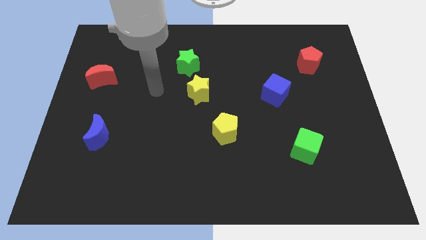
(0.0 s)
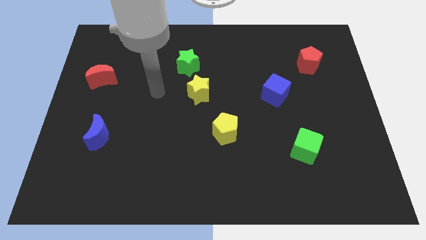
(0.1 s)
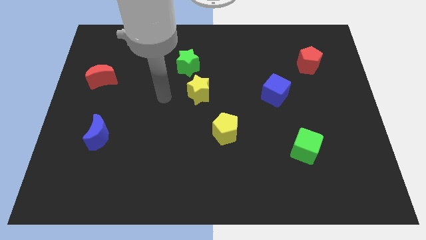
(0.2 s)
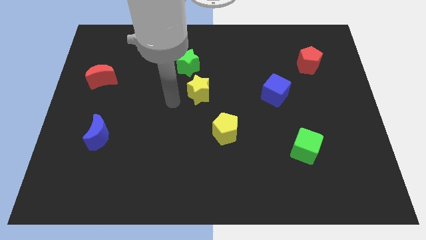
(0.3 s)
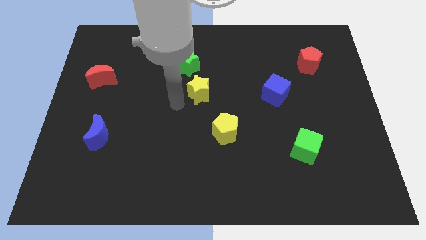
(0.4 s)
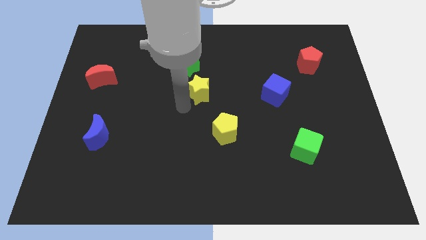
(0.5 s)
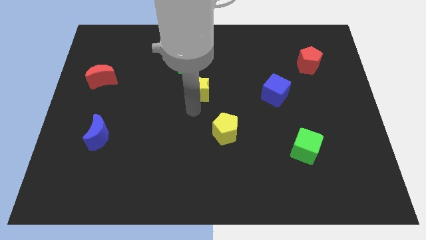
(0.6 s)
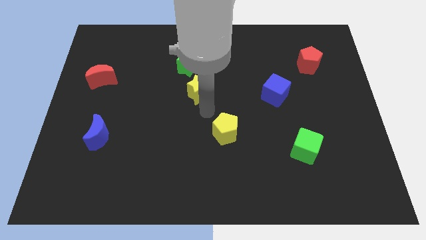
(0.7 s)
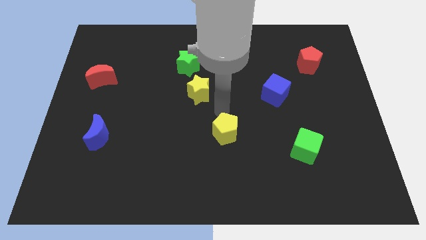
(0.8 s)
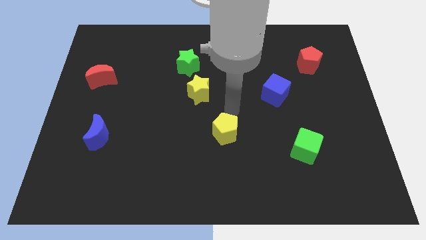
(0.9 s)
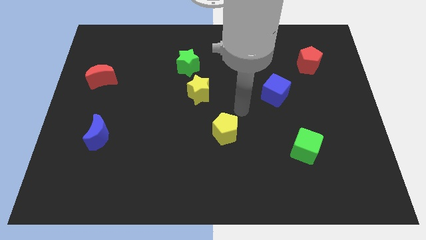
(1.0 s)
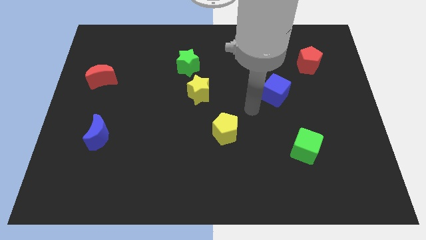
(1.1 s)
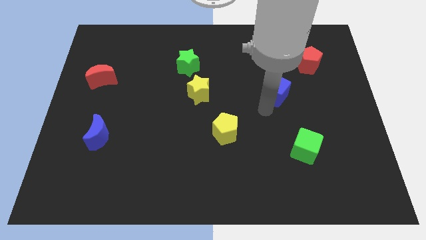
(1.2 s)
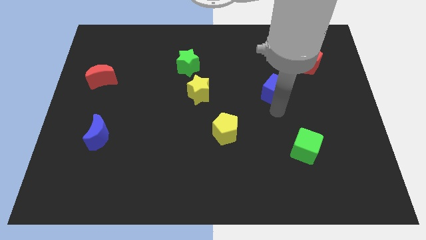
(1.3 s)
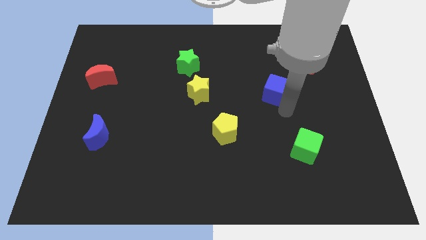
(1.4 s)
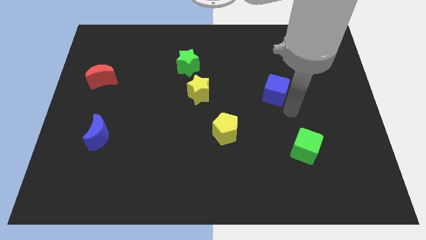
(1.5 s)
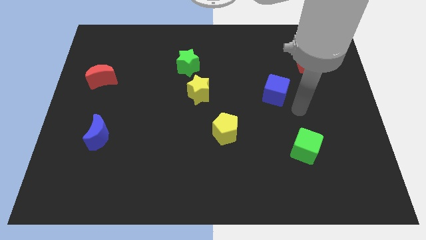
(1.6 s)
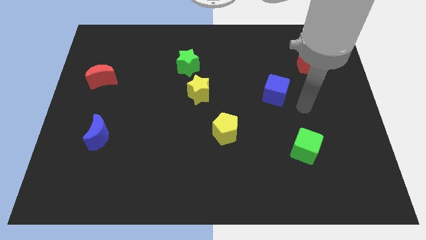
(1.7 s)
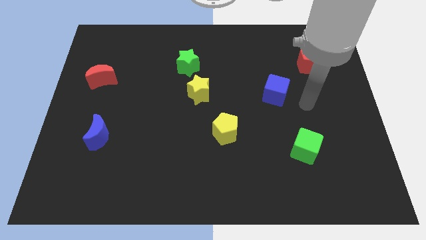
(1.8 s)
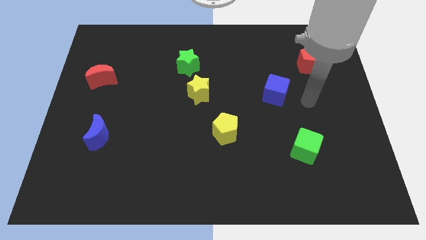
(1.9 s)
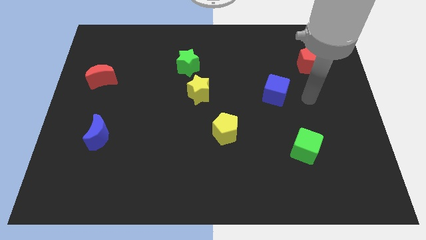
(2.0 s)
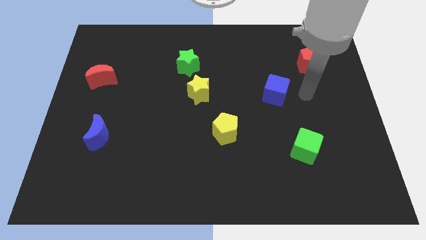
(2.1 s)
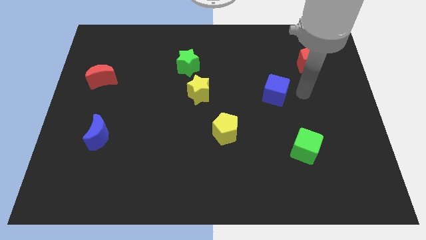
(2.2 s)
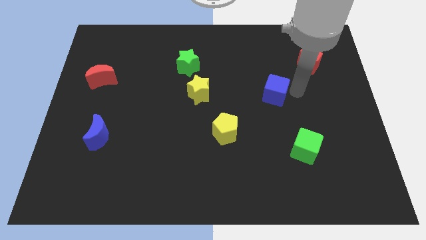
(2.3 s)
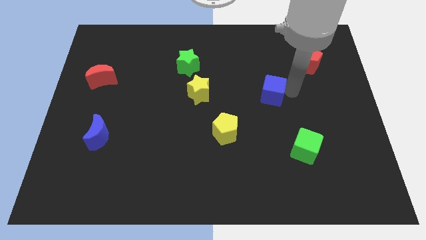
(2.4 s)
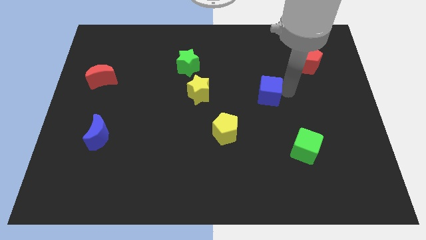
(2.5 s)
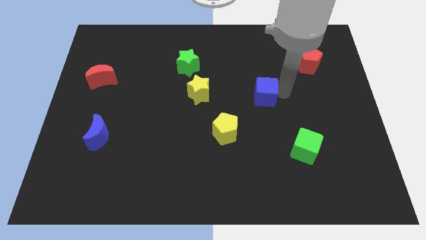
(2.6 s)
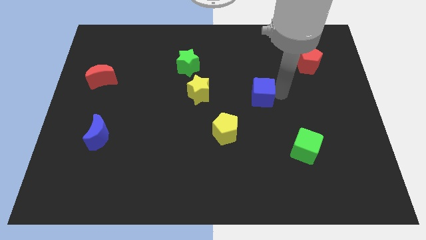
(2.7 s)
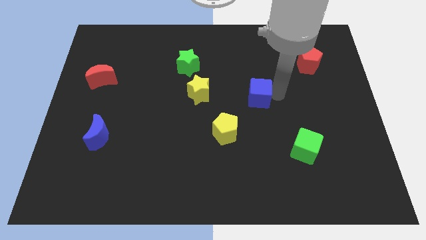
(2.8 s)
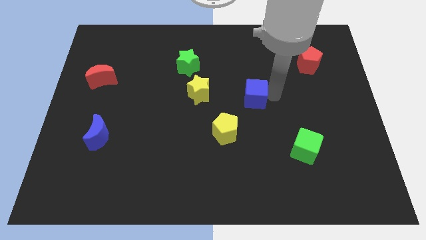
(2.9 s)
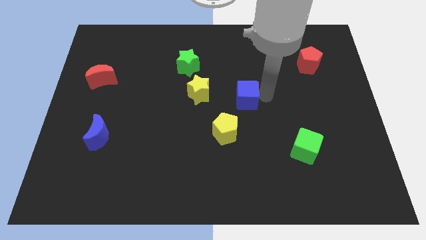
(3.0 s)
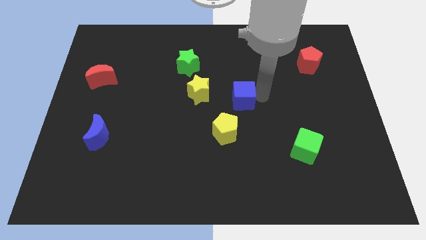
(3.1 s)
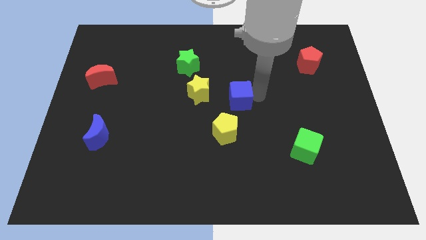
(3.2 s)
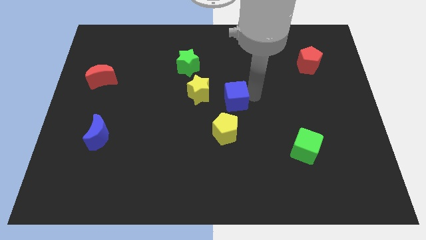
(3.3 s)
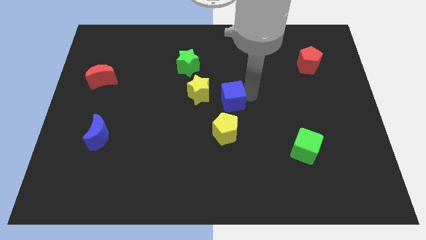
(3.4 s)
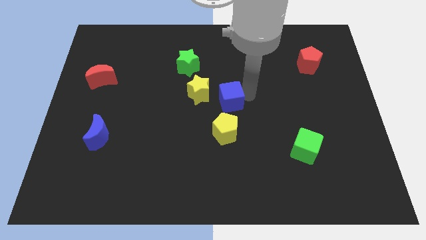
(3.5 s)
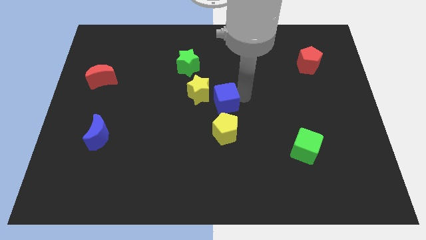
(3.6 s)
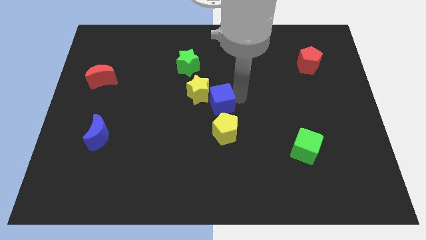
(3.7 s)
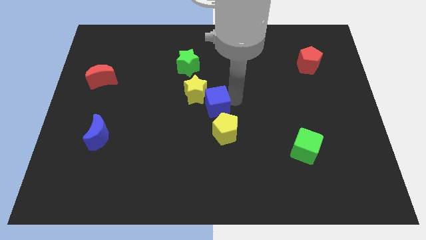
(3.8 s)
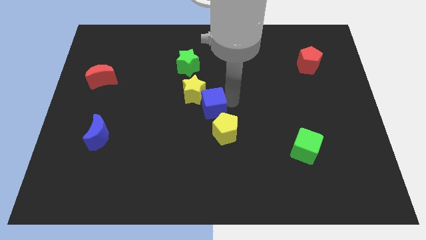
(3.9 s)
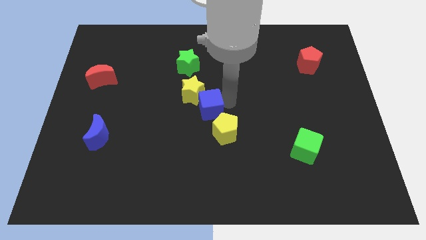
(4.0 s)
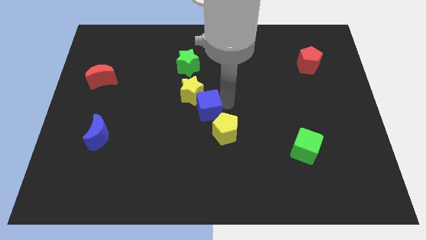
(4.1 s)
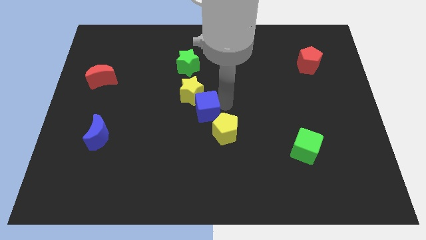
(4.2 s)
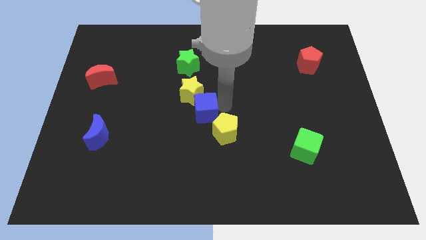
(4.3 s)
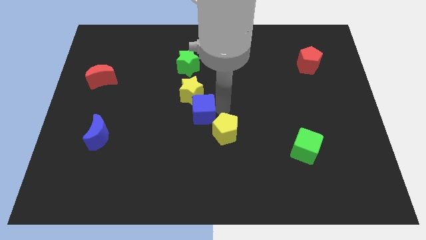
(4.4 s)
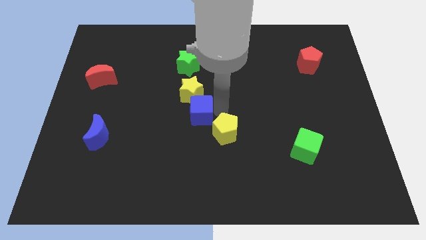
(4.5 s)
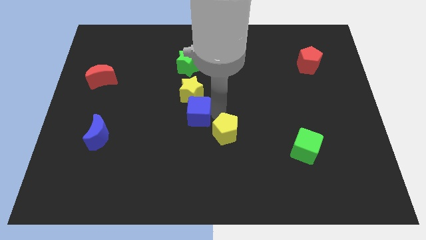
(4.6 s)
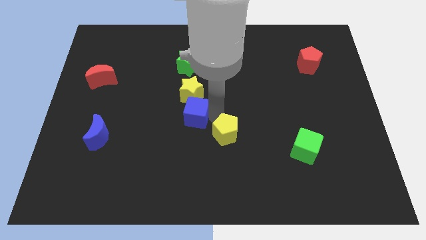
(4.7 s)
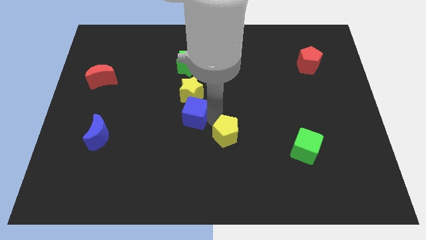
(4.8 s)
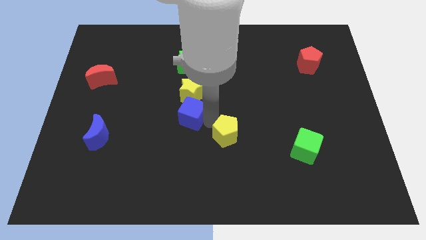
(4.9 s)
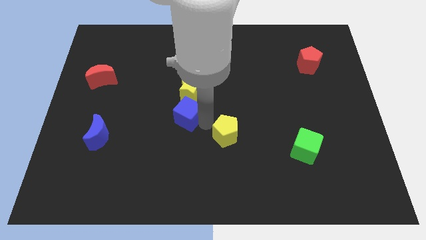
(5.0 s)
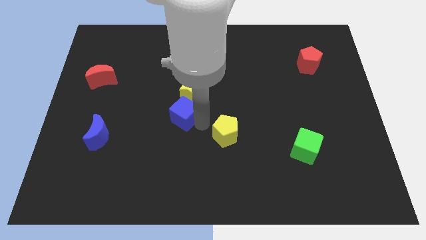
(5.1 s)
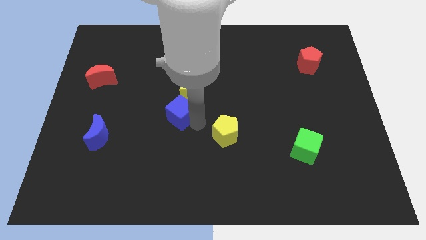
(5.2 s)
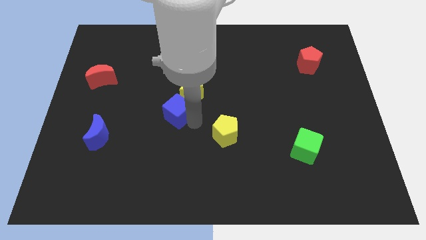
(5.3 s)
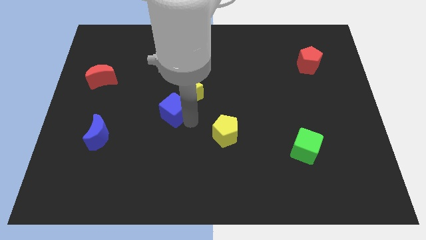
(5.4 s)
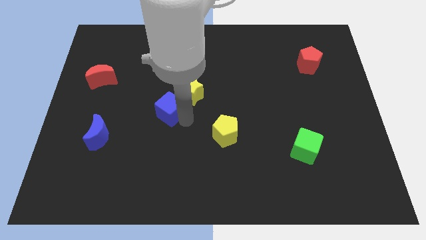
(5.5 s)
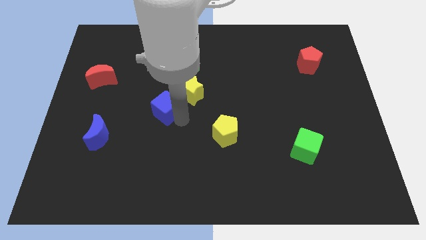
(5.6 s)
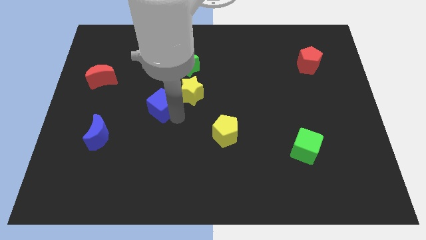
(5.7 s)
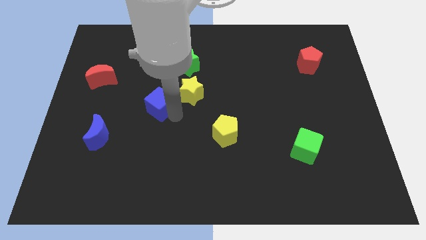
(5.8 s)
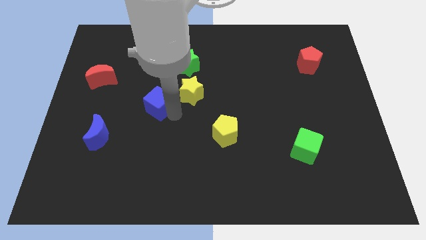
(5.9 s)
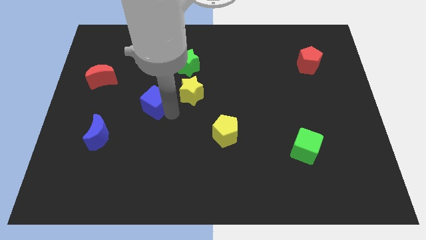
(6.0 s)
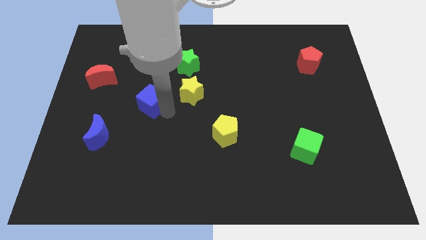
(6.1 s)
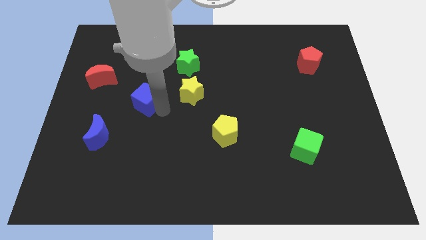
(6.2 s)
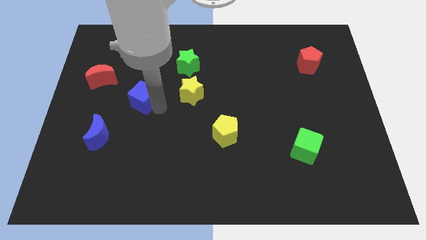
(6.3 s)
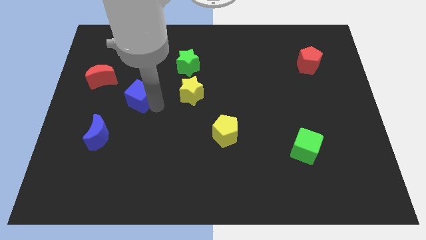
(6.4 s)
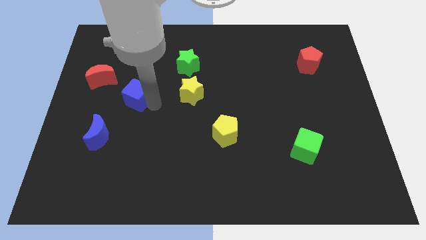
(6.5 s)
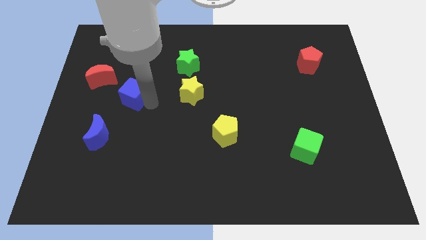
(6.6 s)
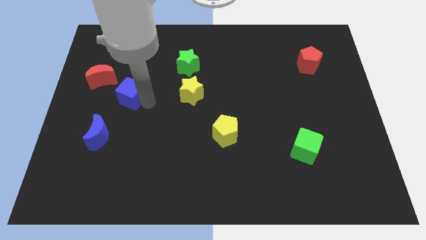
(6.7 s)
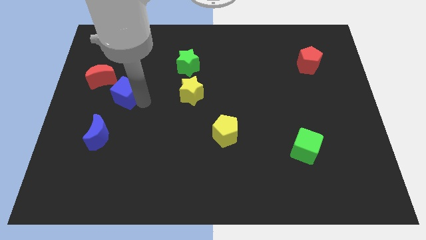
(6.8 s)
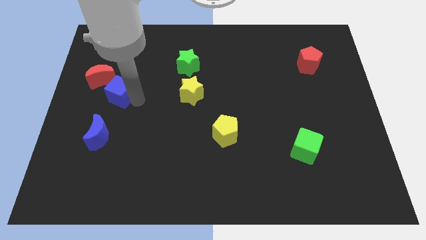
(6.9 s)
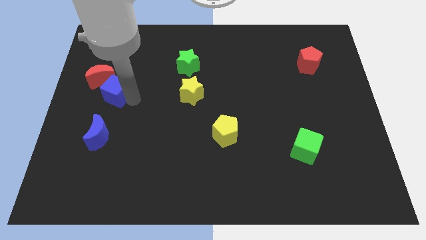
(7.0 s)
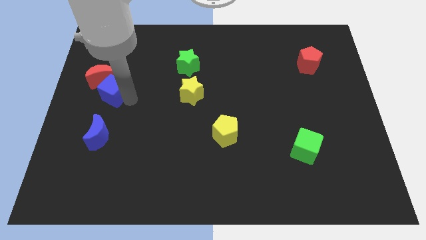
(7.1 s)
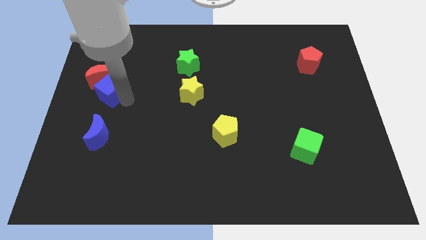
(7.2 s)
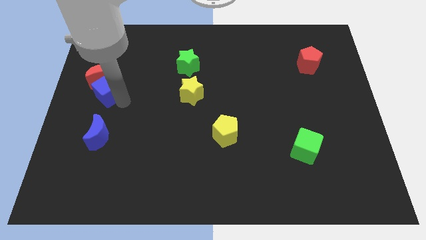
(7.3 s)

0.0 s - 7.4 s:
slide the blue cube close to the red moon

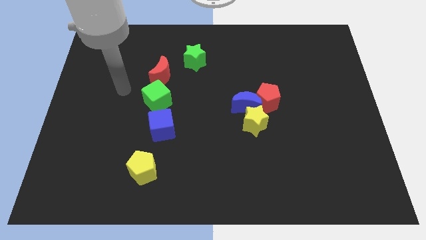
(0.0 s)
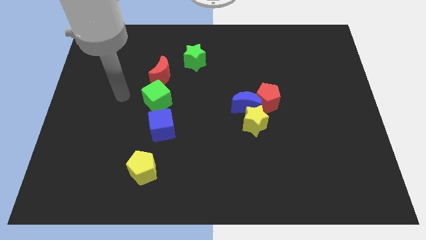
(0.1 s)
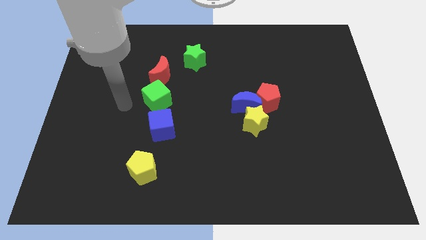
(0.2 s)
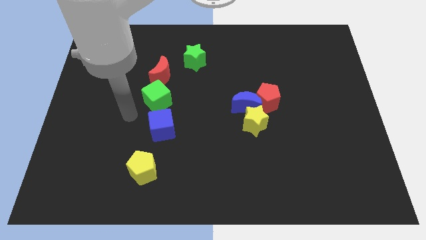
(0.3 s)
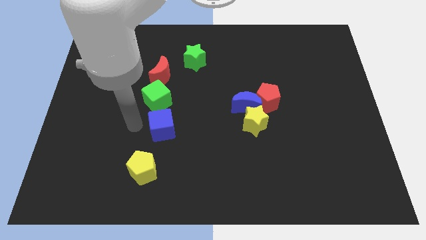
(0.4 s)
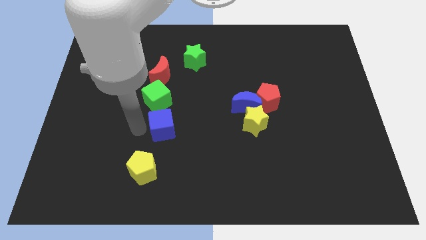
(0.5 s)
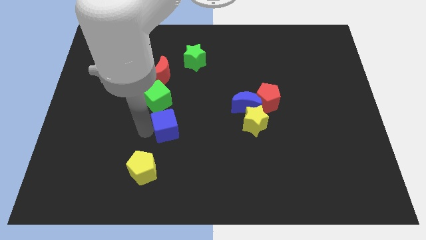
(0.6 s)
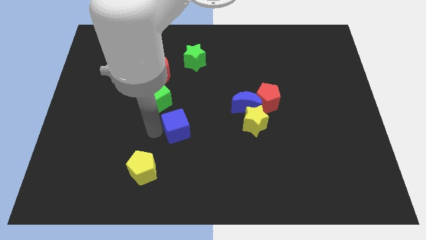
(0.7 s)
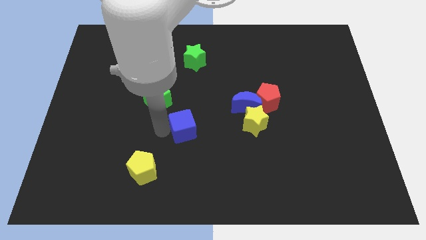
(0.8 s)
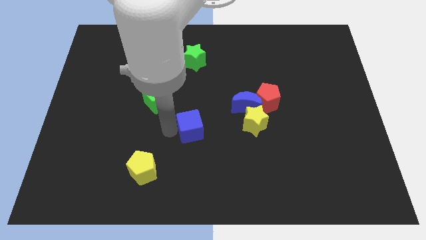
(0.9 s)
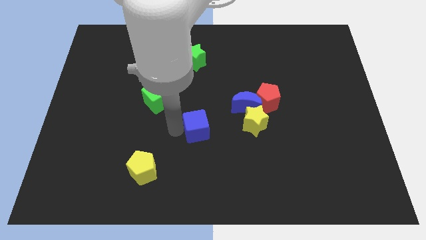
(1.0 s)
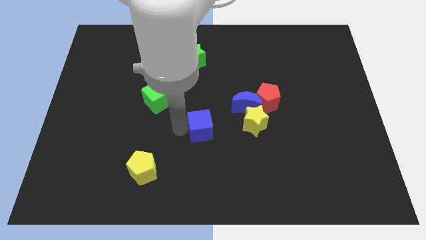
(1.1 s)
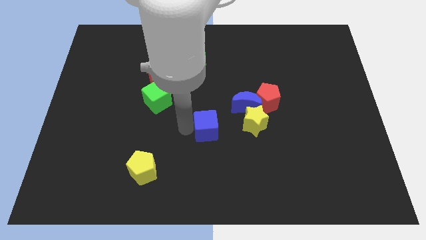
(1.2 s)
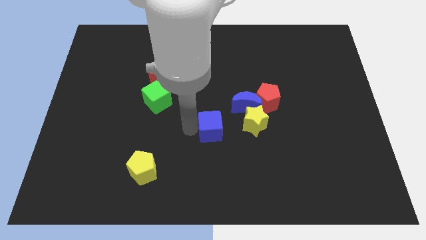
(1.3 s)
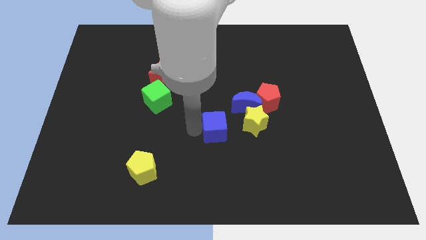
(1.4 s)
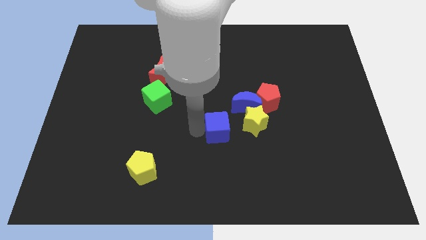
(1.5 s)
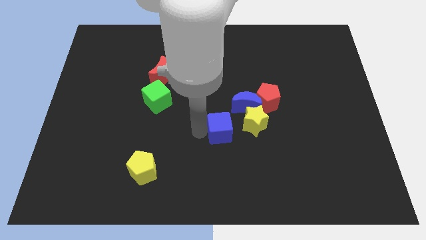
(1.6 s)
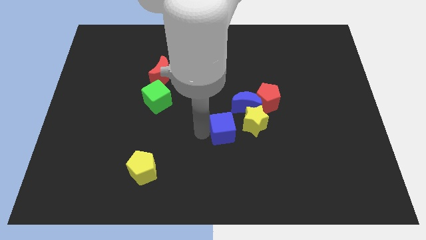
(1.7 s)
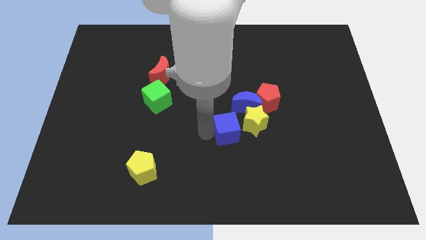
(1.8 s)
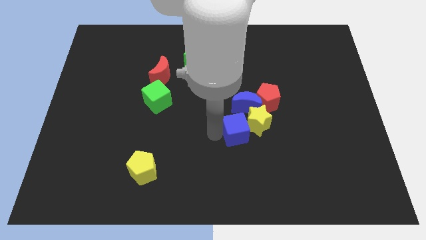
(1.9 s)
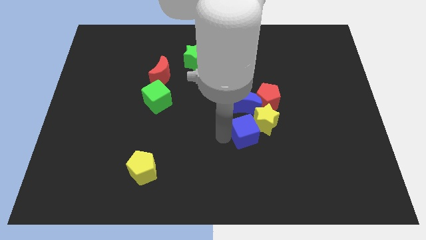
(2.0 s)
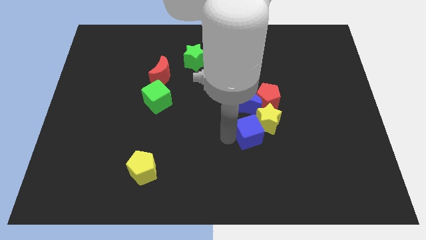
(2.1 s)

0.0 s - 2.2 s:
move the blue cube towards the yellow star
